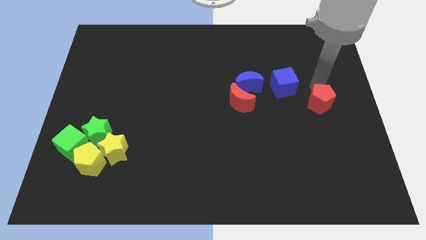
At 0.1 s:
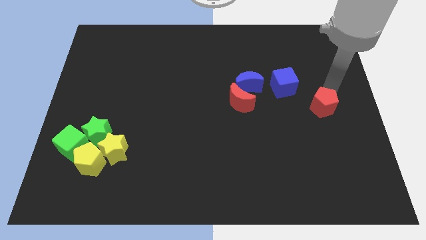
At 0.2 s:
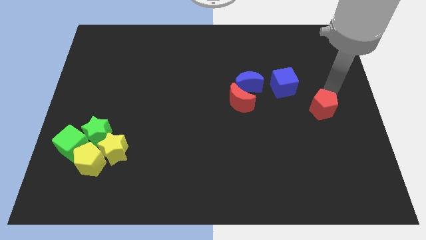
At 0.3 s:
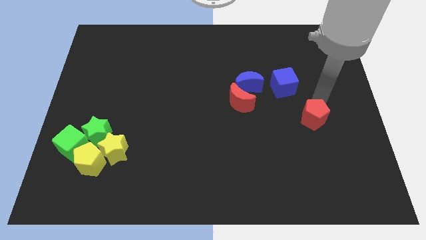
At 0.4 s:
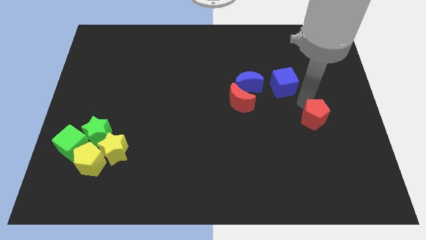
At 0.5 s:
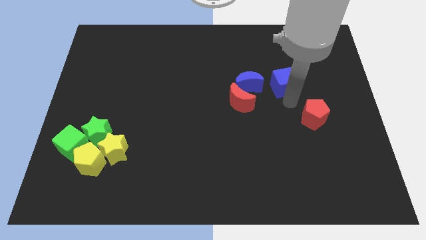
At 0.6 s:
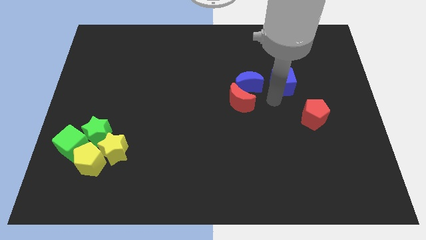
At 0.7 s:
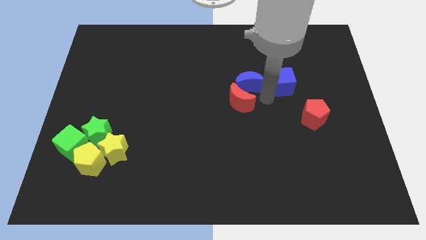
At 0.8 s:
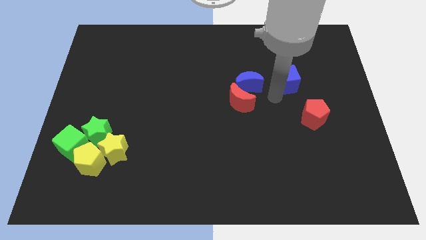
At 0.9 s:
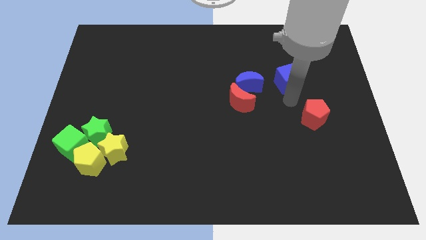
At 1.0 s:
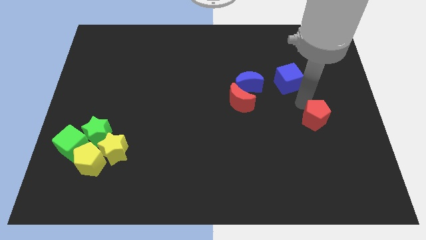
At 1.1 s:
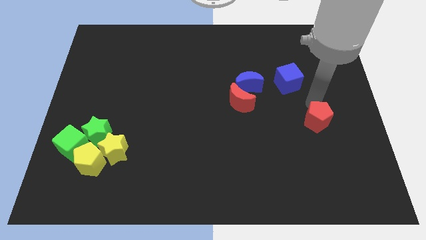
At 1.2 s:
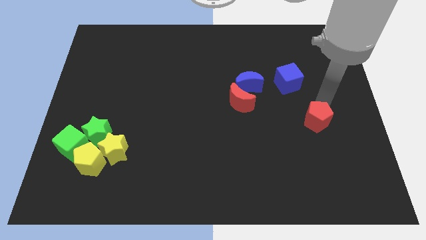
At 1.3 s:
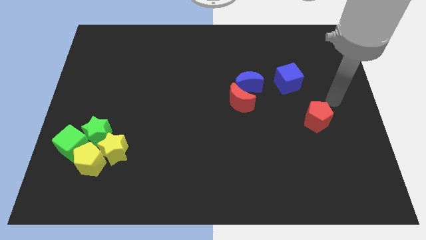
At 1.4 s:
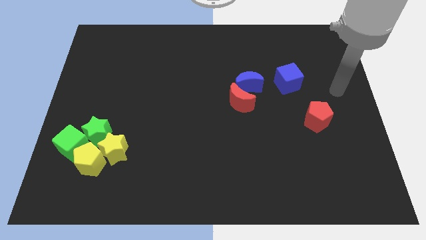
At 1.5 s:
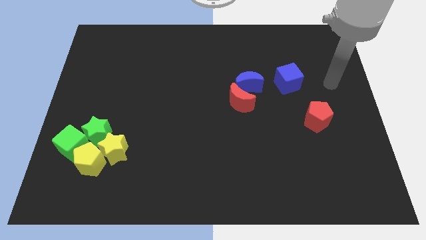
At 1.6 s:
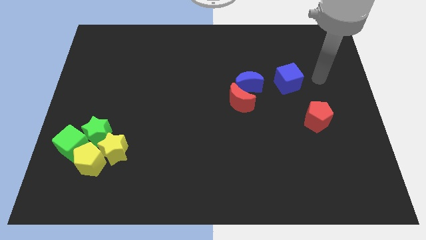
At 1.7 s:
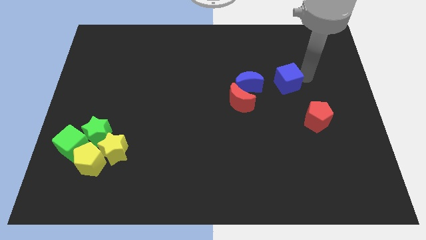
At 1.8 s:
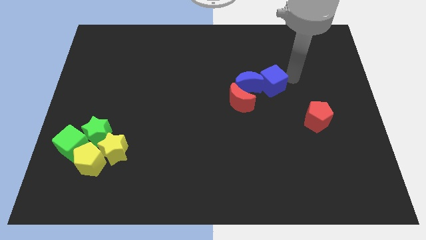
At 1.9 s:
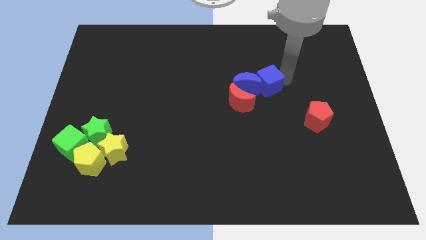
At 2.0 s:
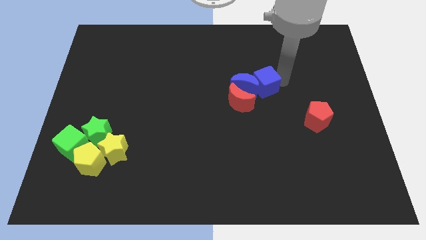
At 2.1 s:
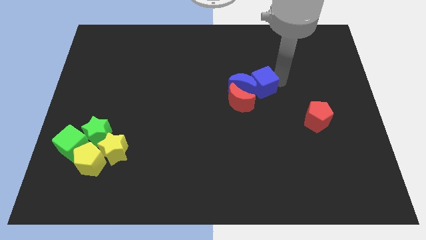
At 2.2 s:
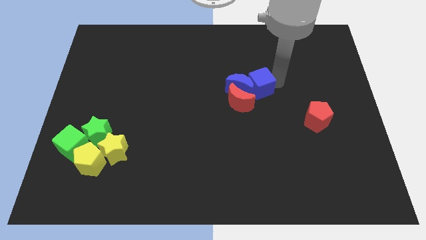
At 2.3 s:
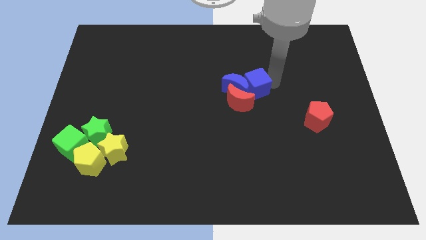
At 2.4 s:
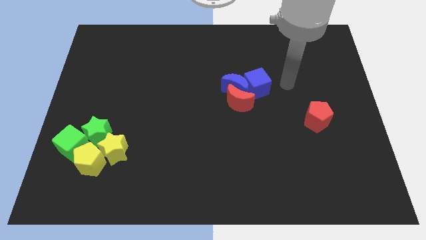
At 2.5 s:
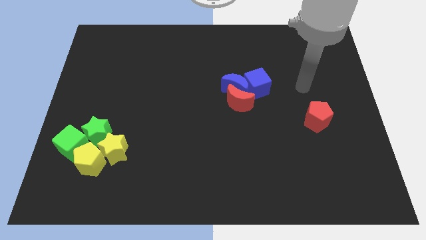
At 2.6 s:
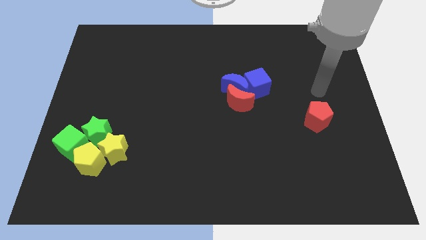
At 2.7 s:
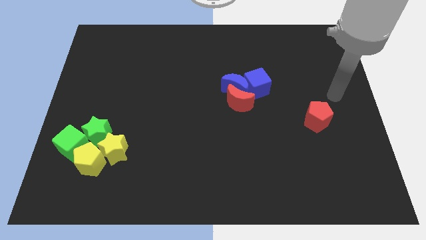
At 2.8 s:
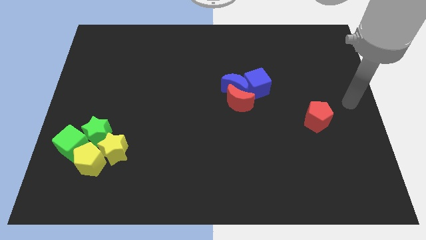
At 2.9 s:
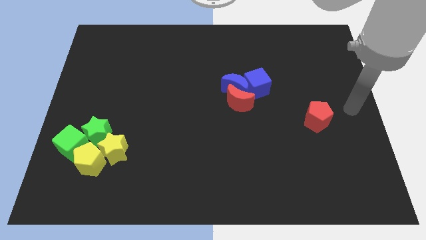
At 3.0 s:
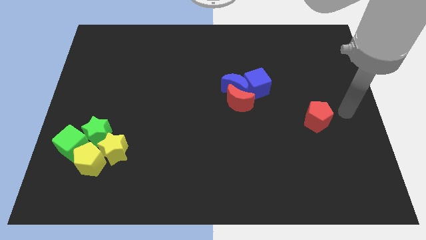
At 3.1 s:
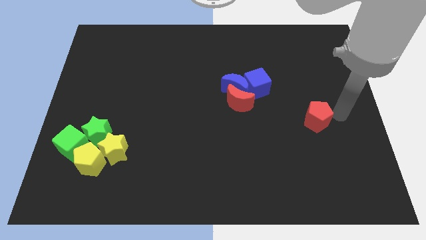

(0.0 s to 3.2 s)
push the blue cube into the blue crescent

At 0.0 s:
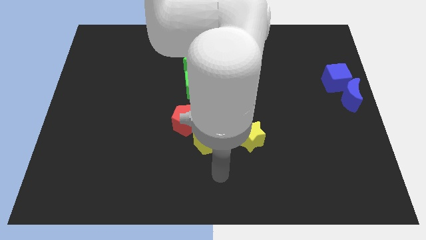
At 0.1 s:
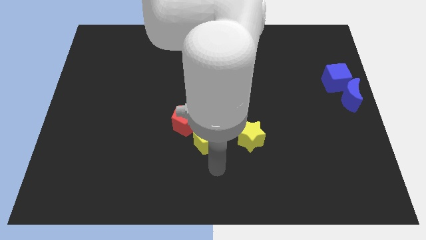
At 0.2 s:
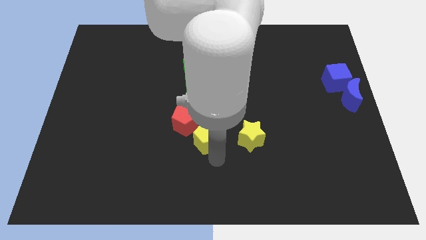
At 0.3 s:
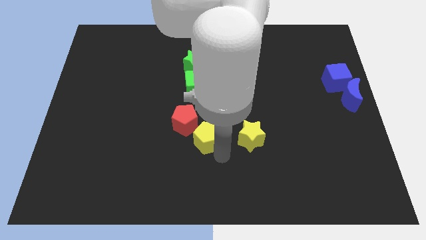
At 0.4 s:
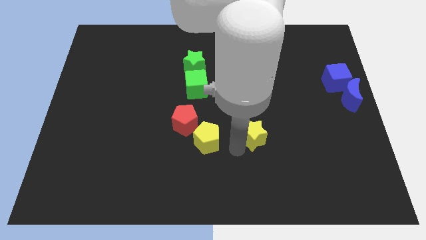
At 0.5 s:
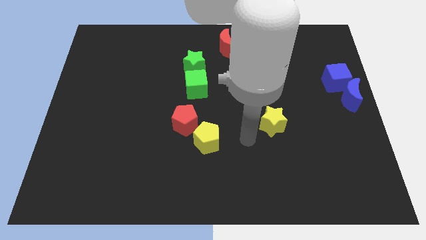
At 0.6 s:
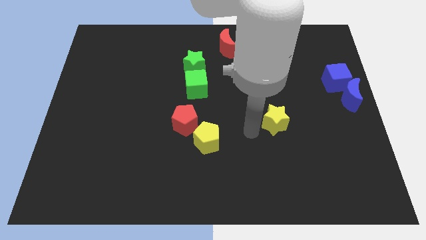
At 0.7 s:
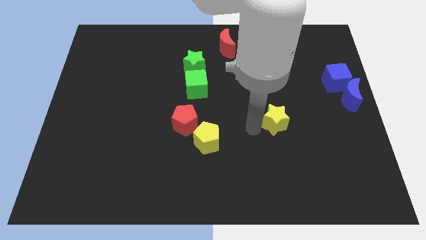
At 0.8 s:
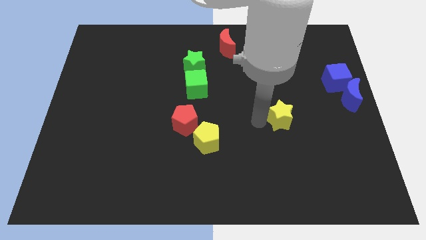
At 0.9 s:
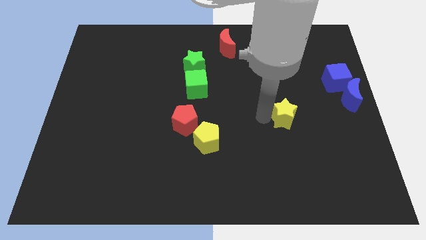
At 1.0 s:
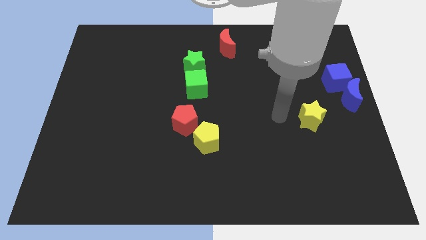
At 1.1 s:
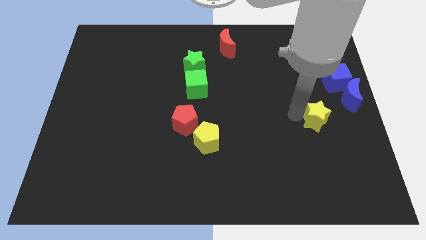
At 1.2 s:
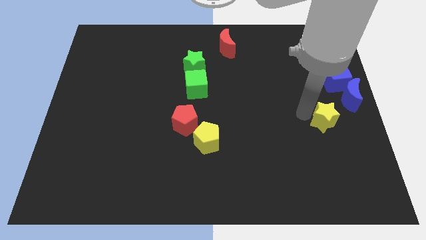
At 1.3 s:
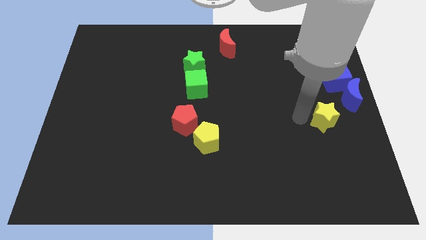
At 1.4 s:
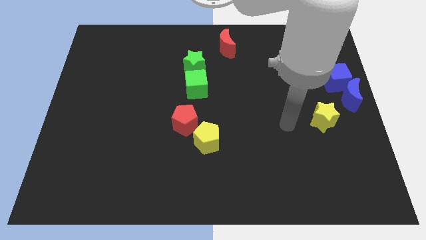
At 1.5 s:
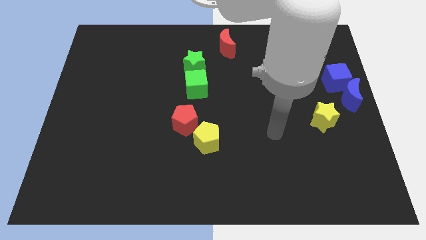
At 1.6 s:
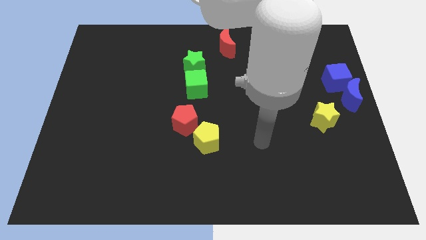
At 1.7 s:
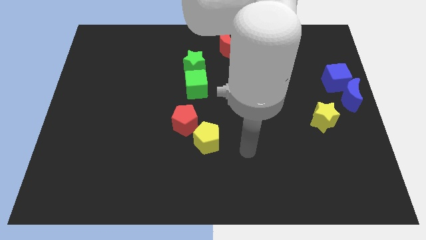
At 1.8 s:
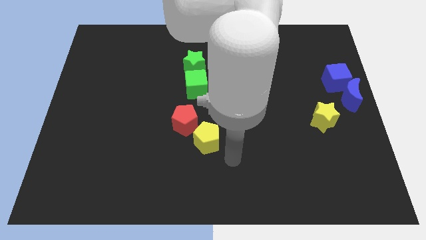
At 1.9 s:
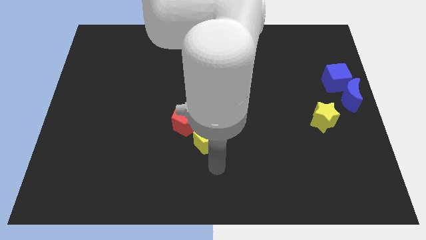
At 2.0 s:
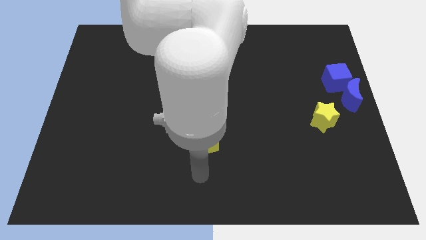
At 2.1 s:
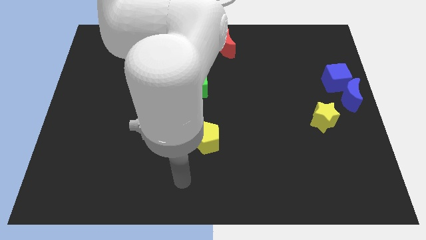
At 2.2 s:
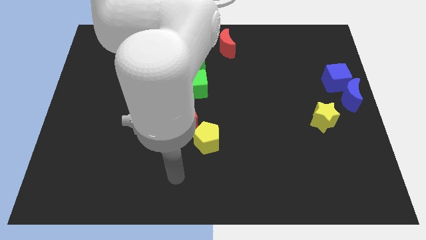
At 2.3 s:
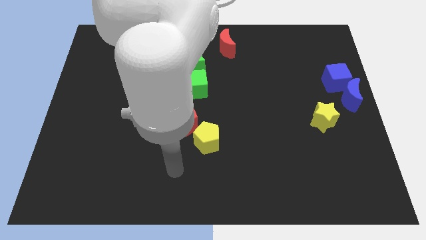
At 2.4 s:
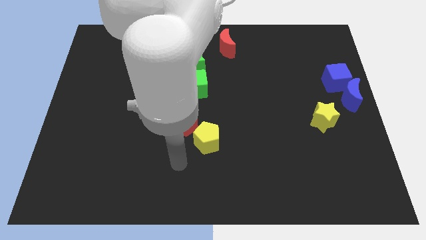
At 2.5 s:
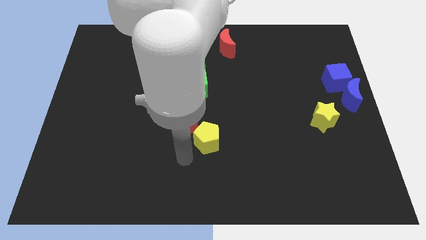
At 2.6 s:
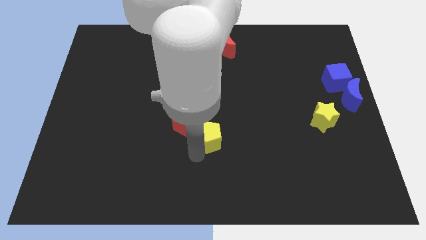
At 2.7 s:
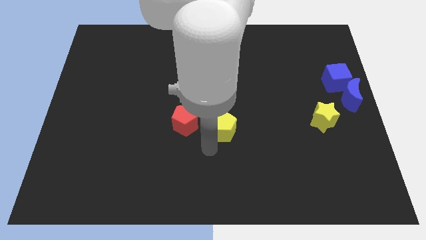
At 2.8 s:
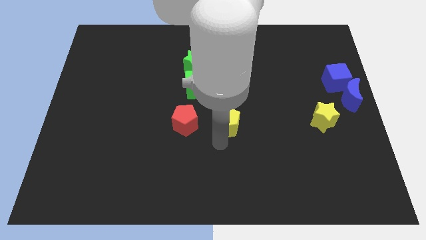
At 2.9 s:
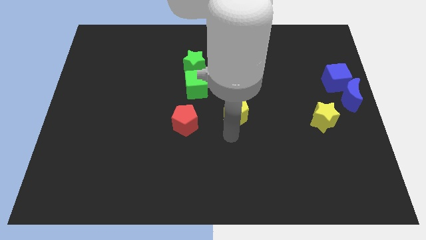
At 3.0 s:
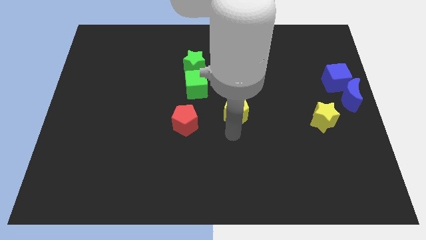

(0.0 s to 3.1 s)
push yellow pentagon beside red pentagon

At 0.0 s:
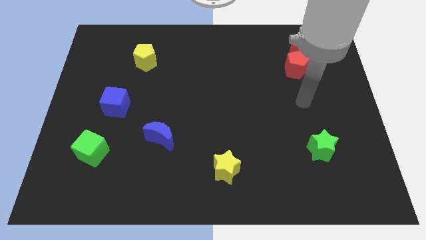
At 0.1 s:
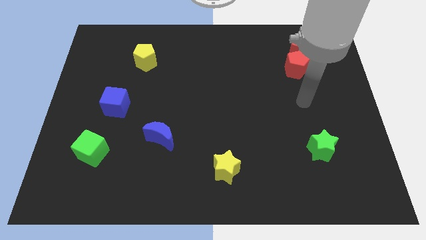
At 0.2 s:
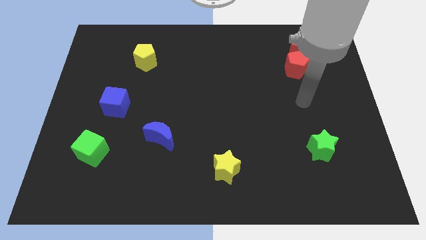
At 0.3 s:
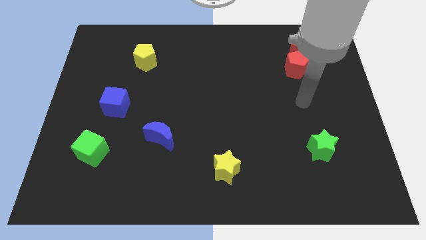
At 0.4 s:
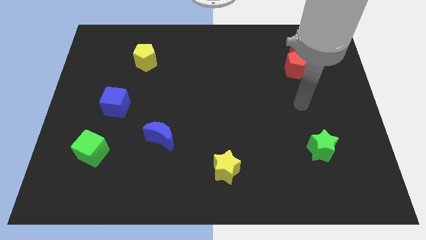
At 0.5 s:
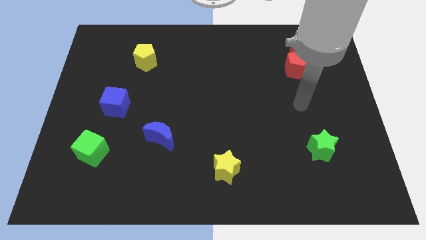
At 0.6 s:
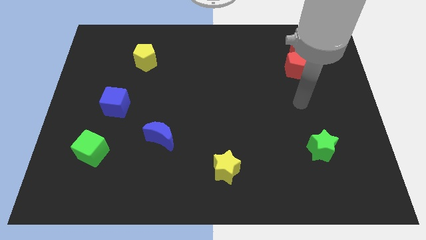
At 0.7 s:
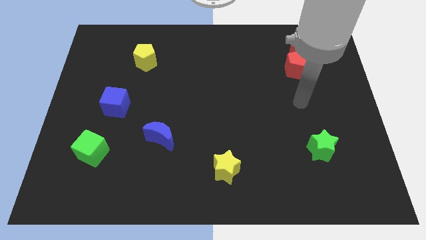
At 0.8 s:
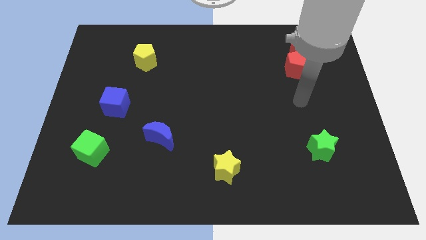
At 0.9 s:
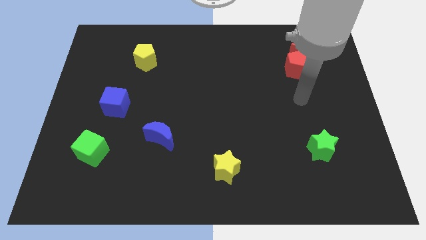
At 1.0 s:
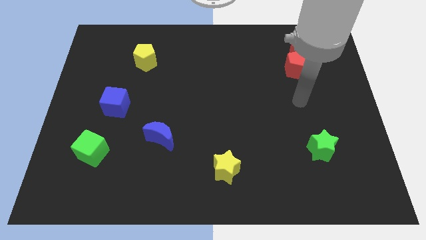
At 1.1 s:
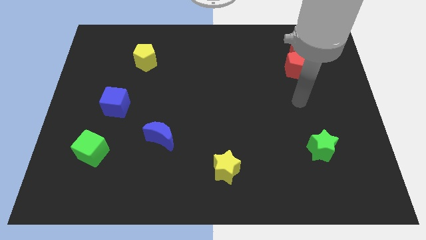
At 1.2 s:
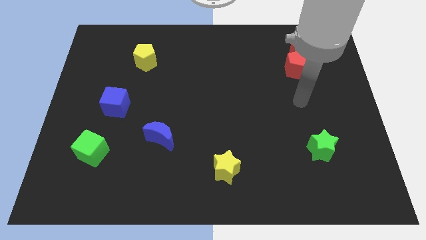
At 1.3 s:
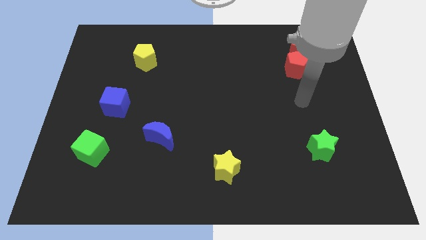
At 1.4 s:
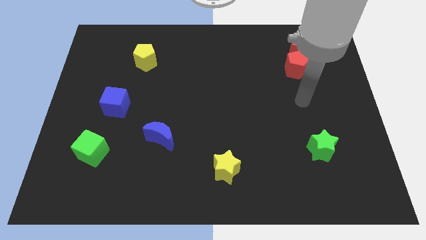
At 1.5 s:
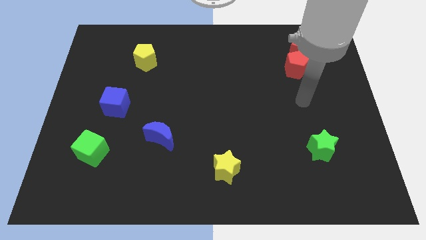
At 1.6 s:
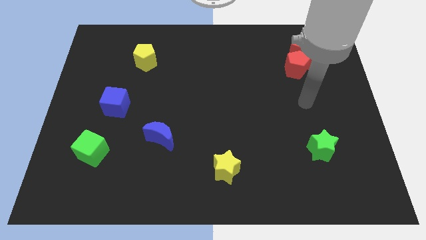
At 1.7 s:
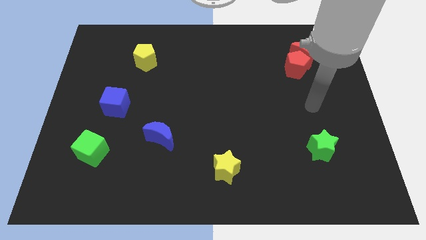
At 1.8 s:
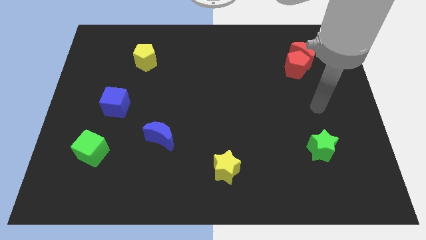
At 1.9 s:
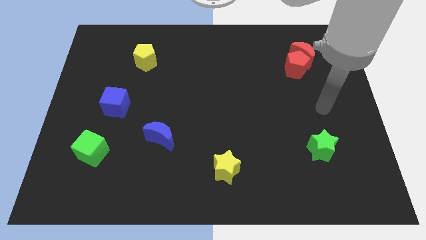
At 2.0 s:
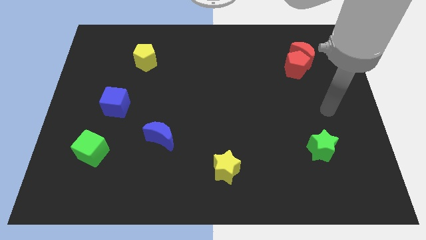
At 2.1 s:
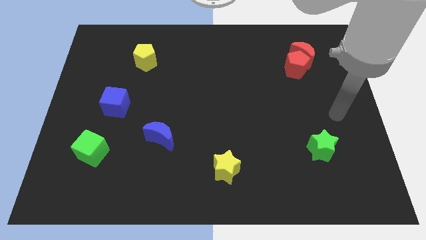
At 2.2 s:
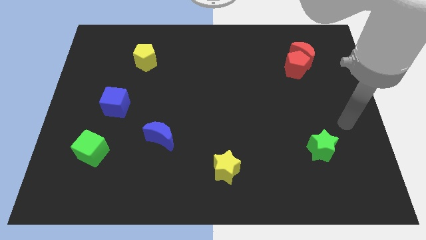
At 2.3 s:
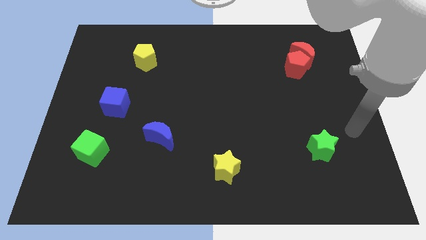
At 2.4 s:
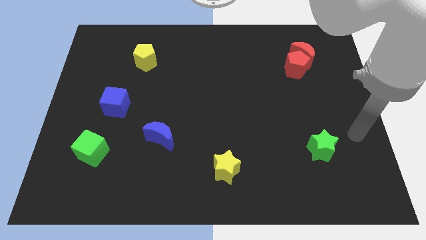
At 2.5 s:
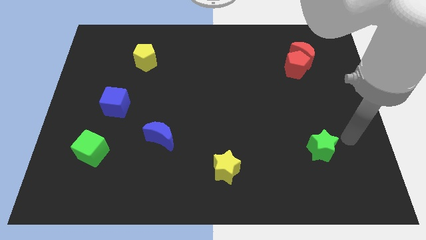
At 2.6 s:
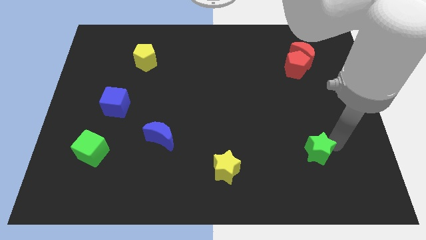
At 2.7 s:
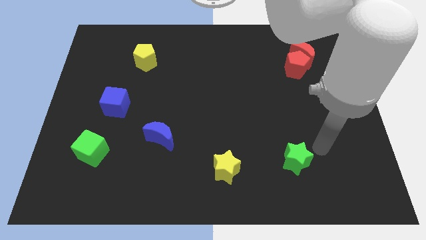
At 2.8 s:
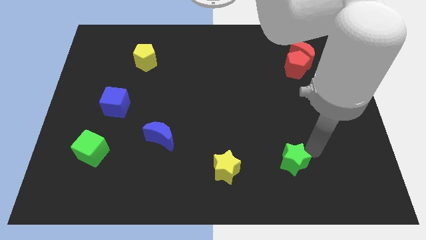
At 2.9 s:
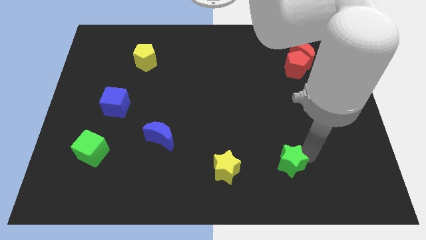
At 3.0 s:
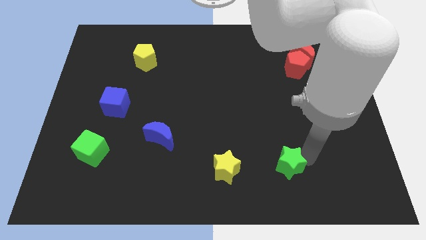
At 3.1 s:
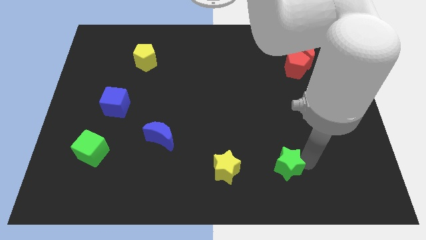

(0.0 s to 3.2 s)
push green star to the right yellow star
